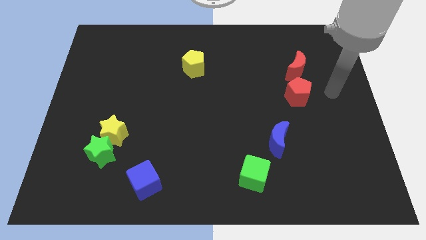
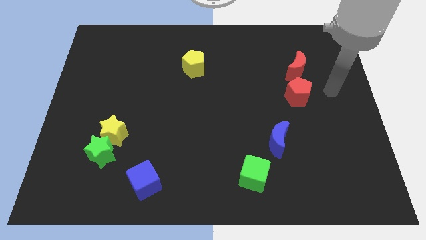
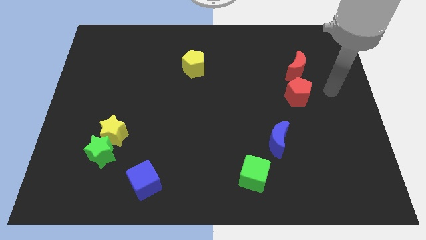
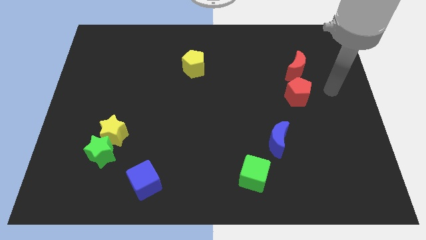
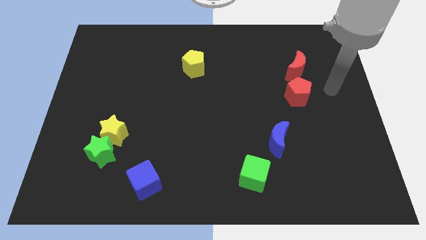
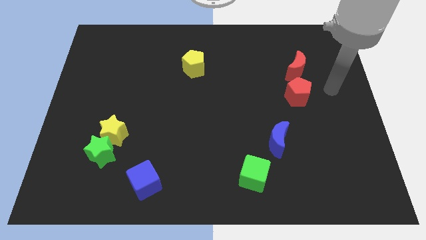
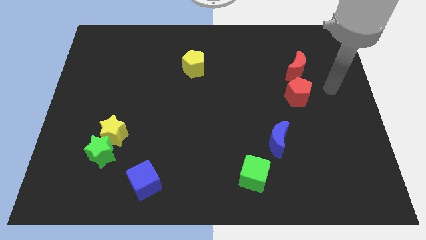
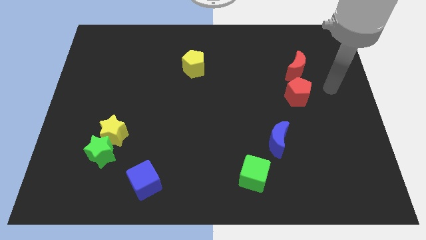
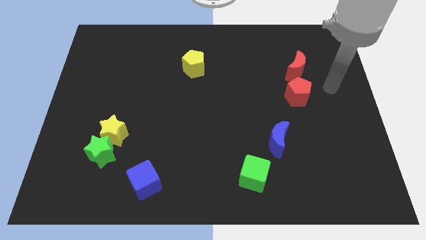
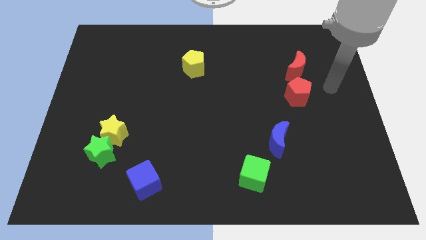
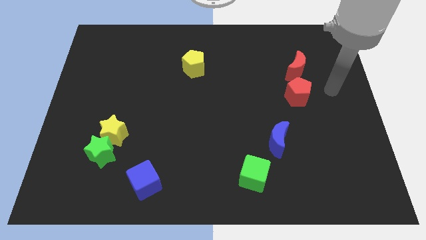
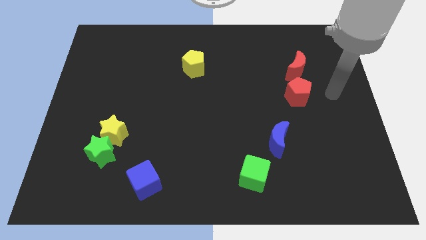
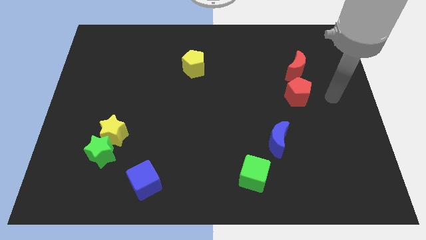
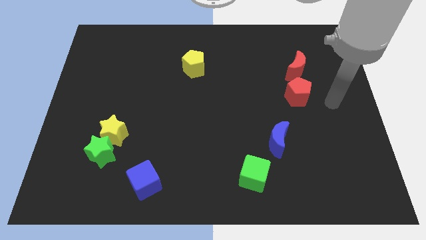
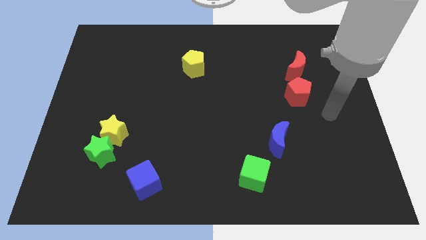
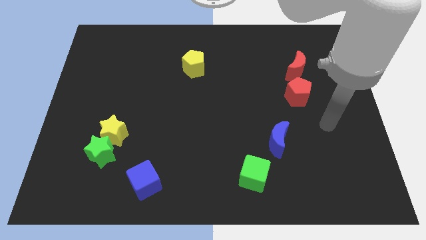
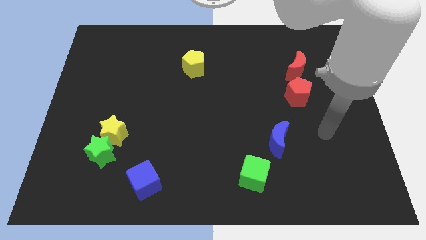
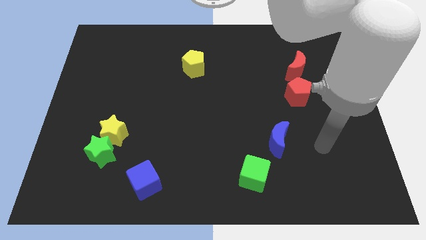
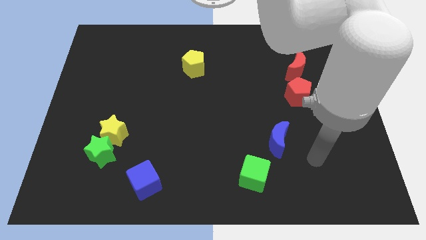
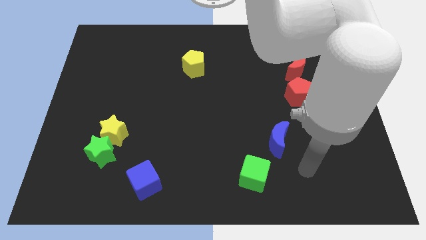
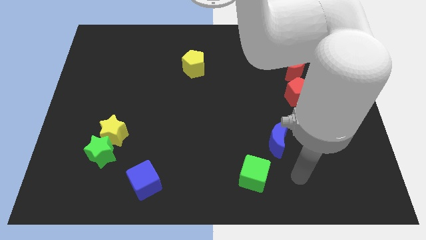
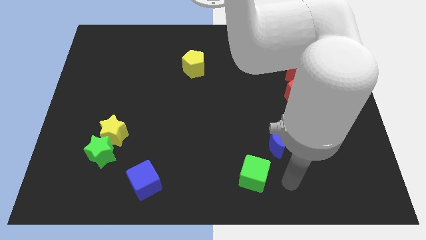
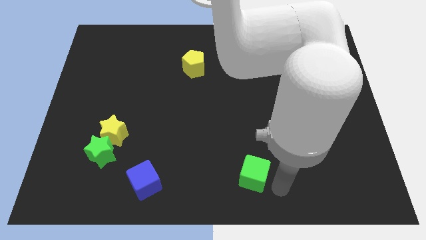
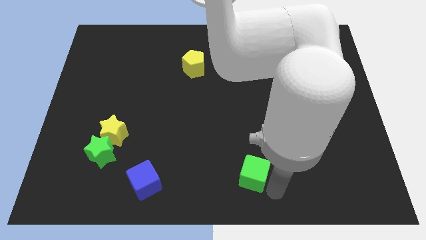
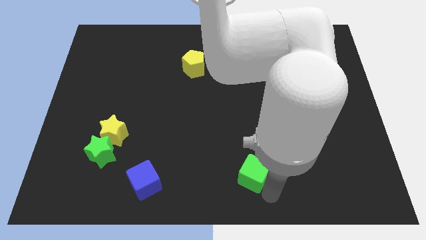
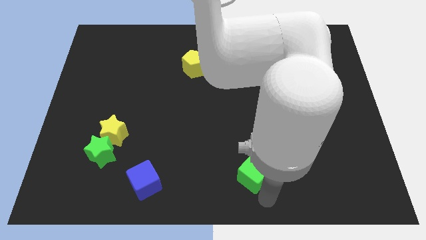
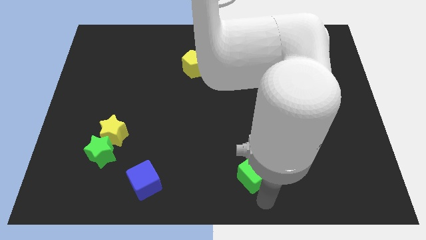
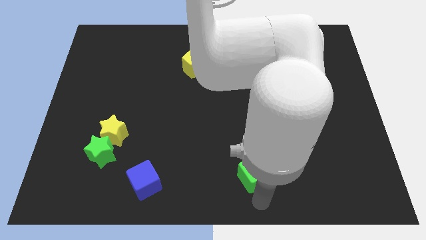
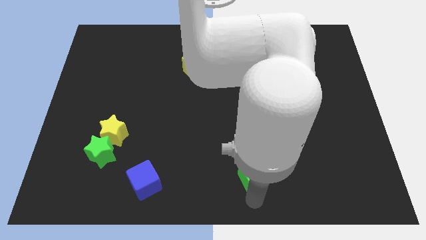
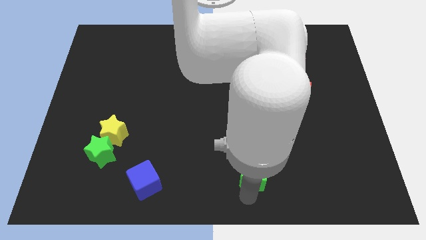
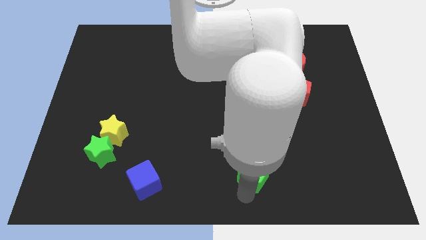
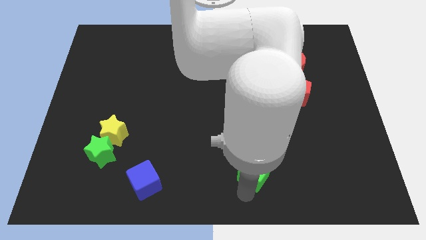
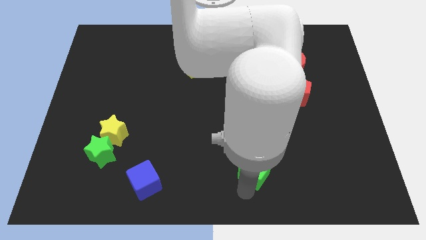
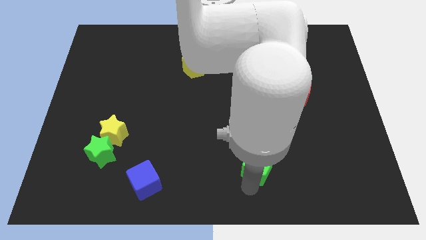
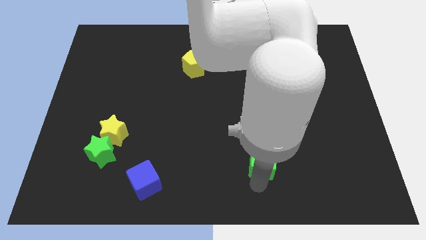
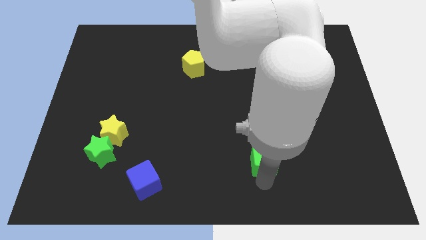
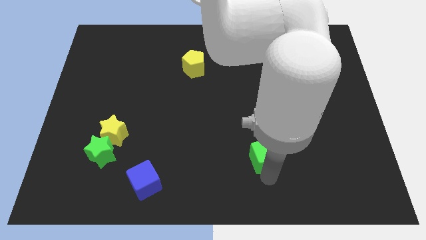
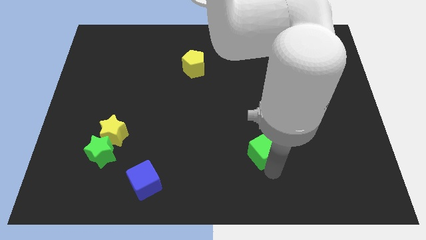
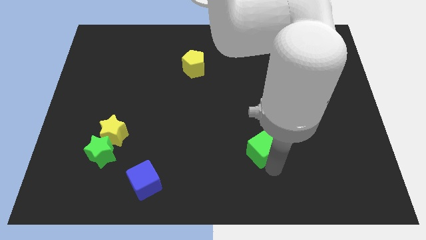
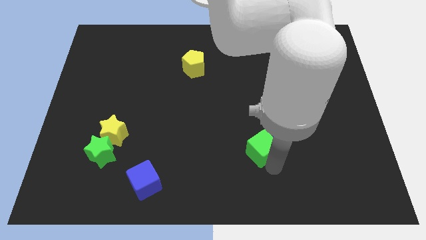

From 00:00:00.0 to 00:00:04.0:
push the green cube into the blue crescent

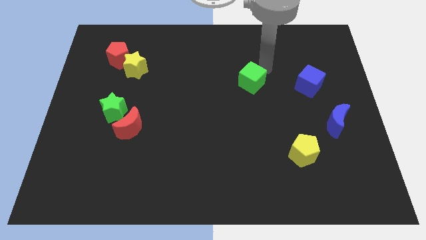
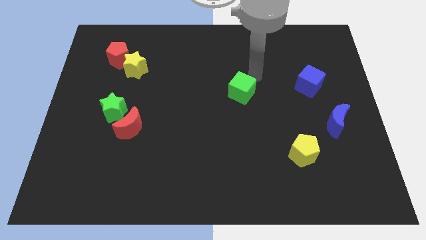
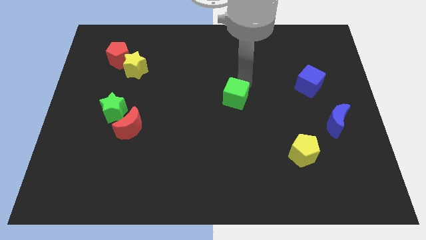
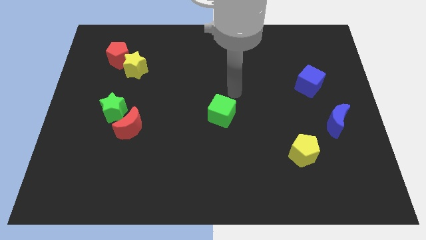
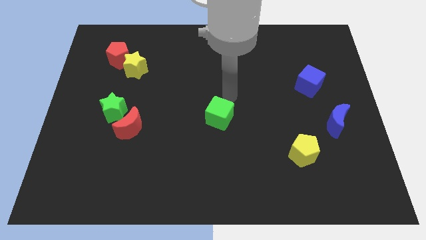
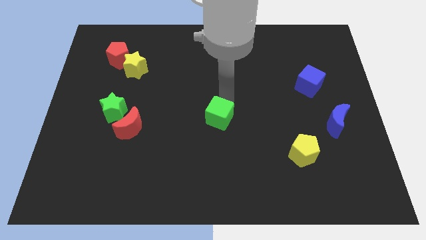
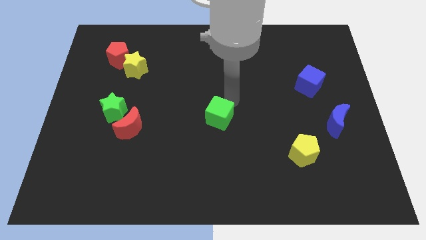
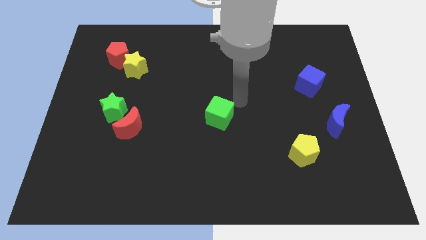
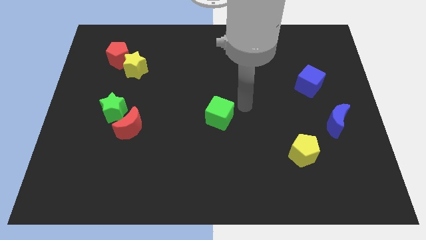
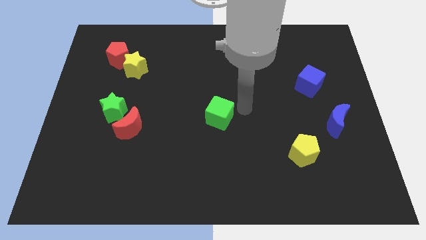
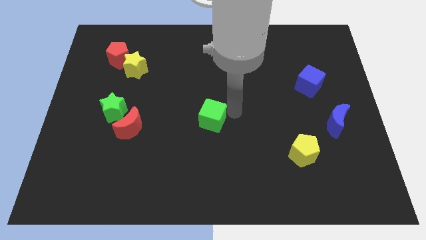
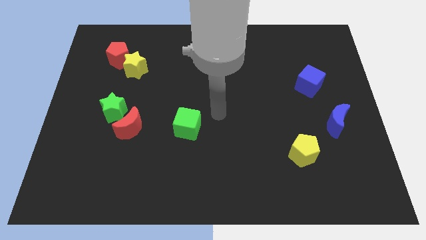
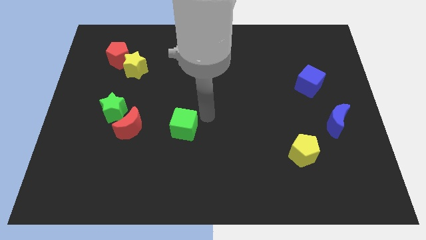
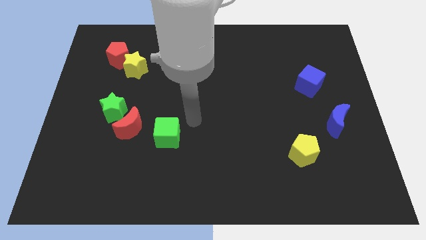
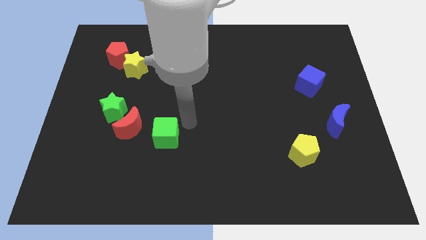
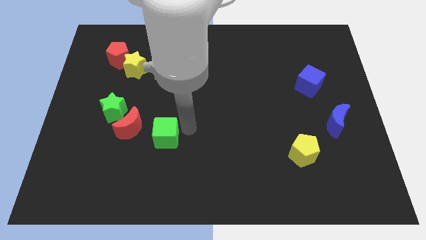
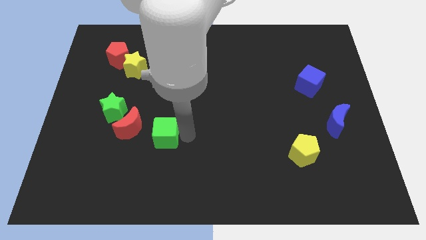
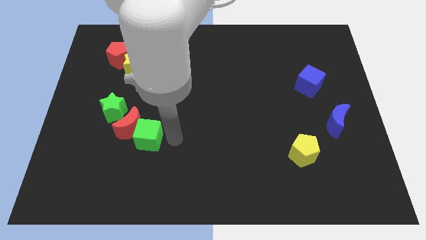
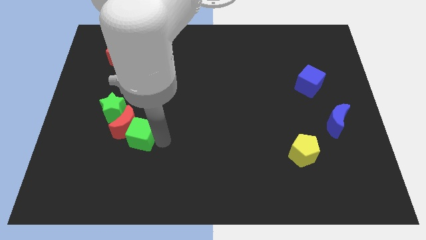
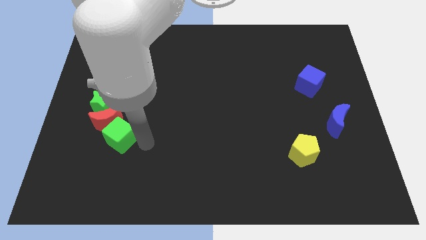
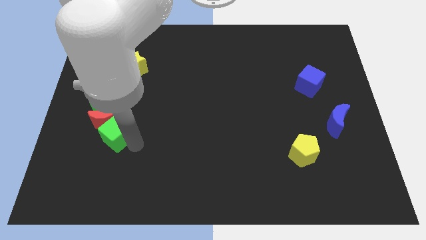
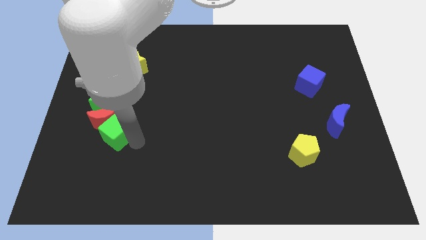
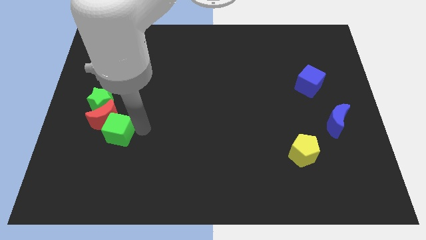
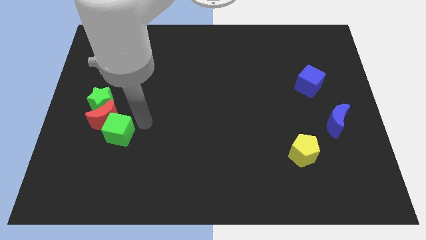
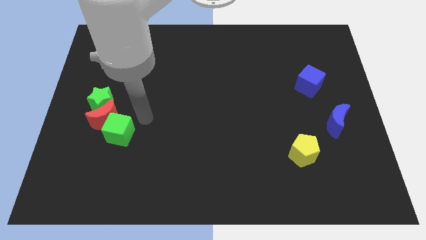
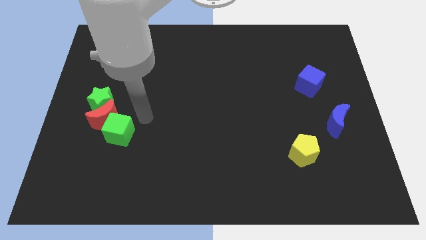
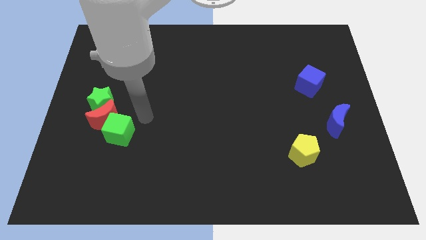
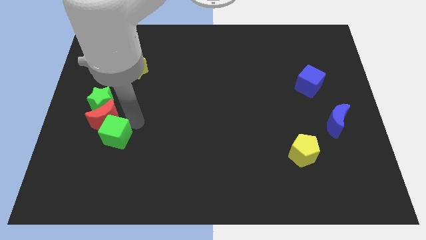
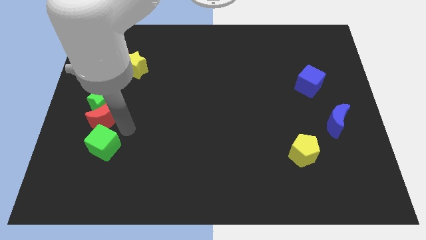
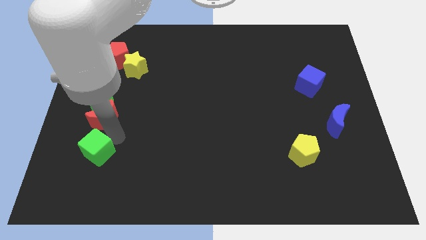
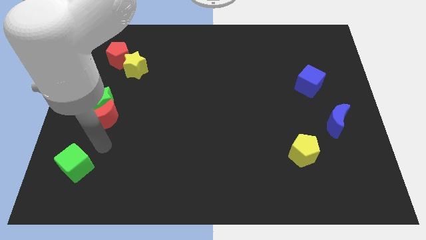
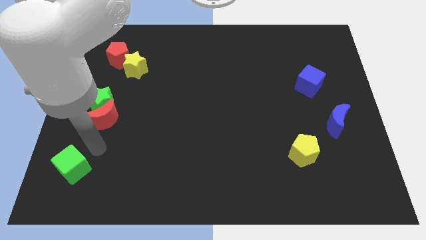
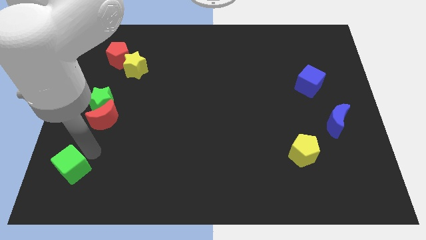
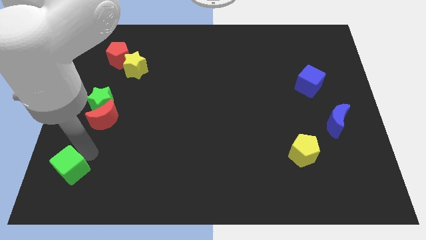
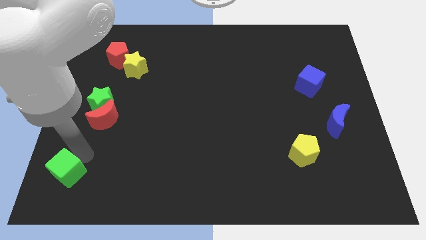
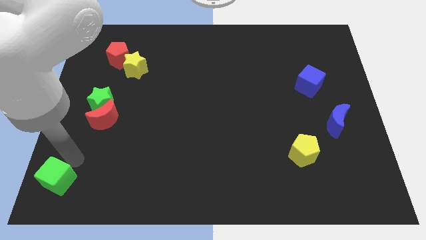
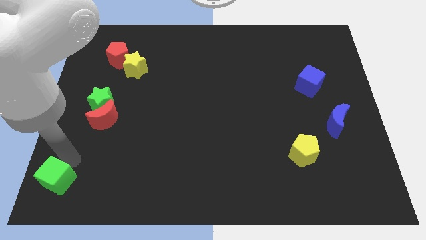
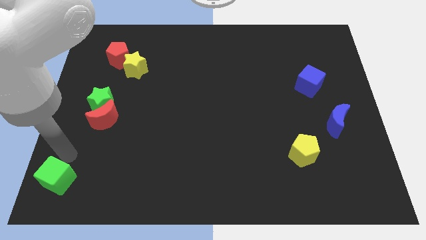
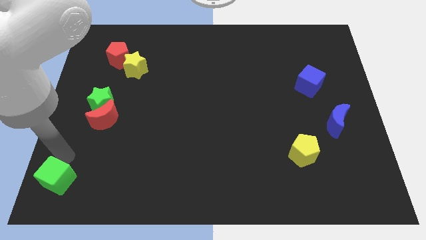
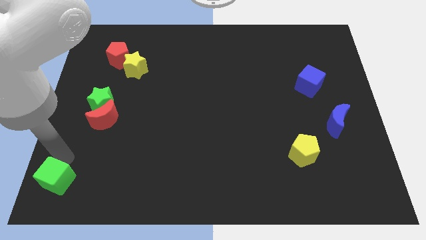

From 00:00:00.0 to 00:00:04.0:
push the green cube to the bottom left of the board

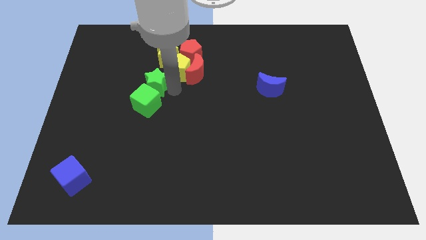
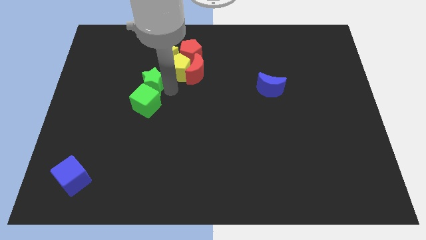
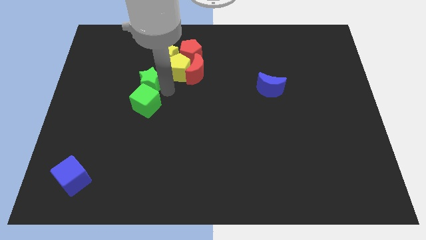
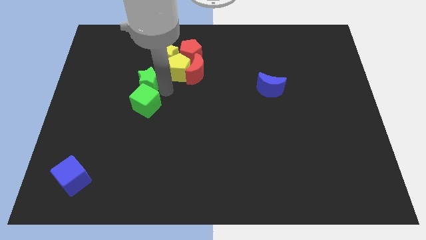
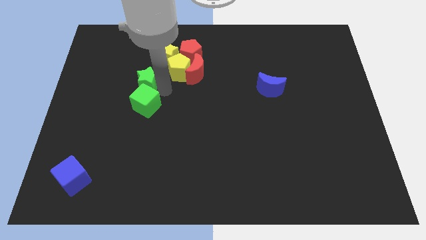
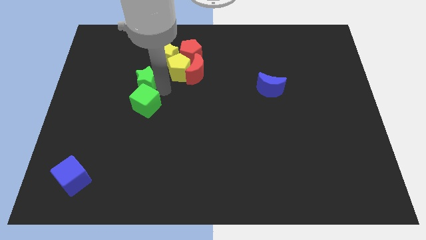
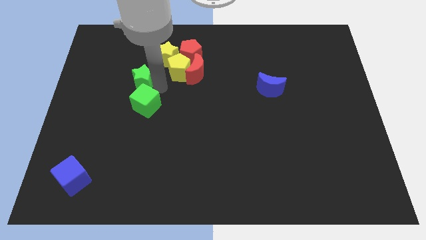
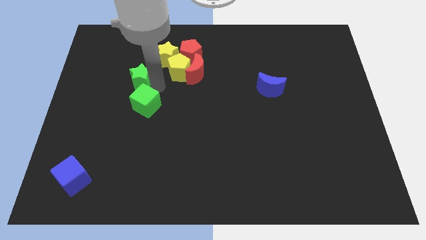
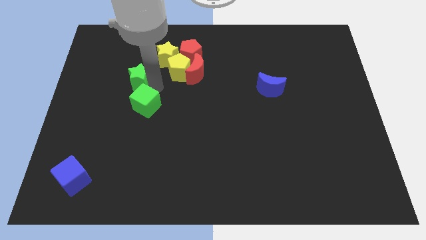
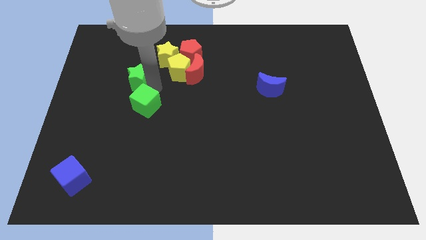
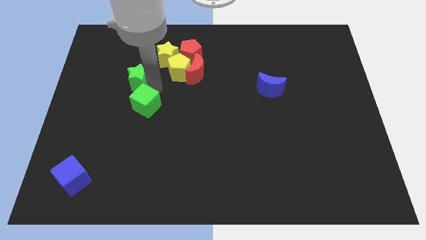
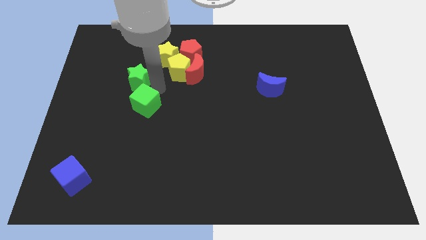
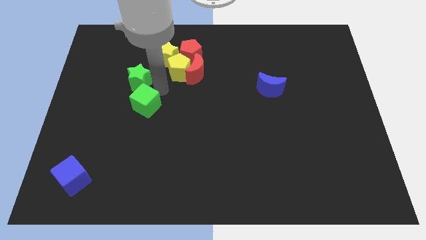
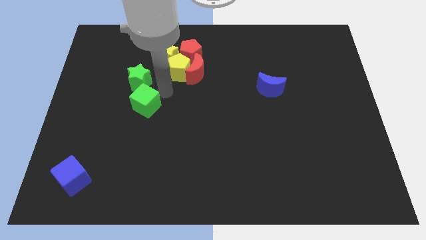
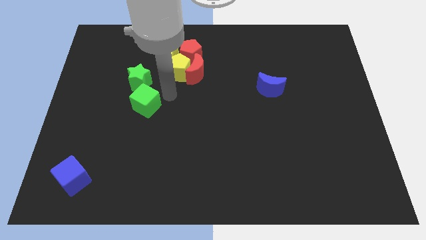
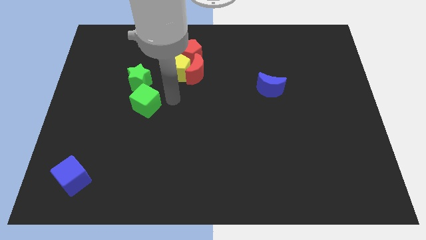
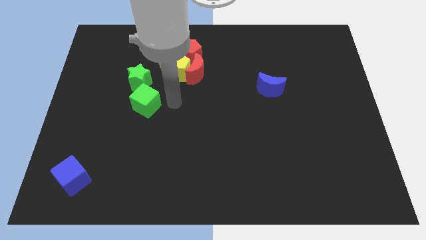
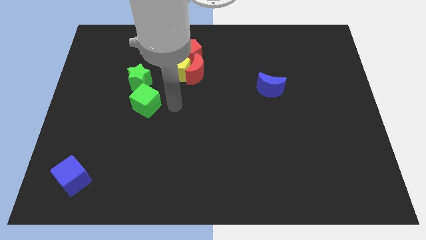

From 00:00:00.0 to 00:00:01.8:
put the green star diagonally to the top left of the green cube
